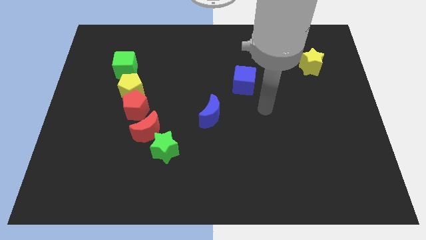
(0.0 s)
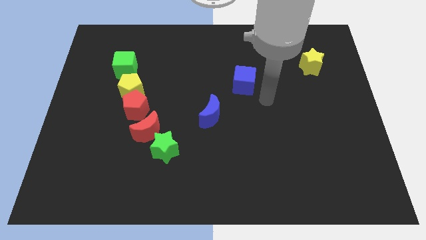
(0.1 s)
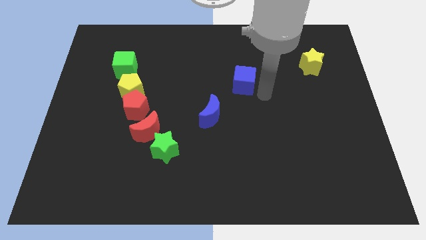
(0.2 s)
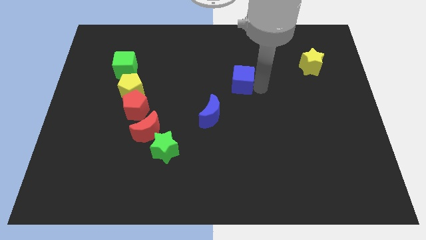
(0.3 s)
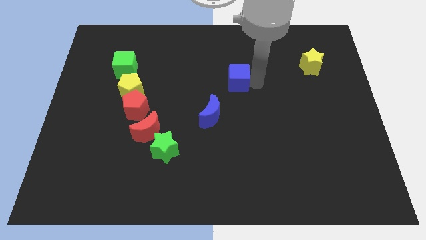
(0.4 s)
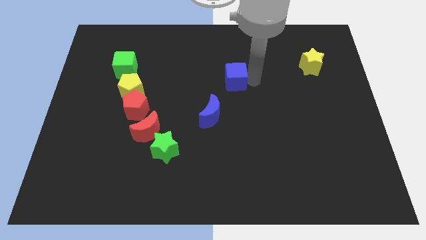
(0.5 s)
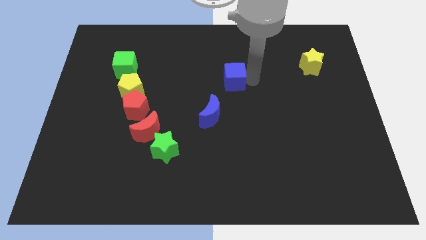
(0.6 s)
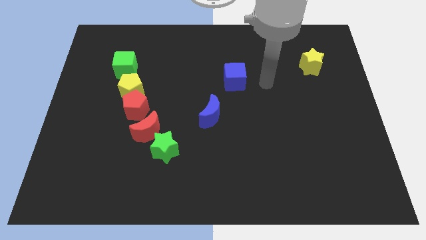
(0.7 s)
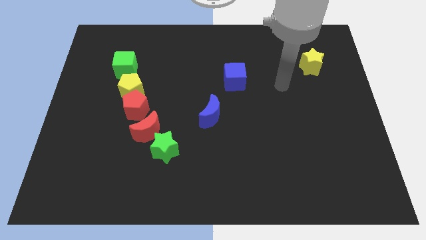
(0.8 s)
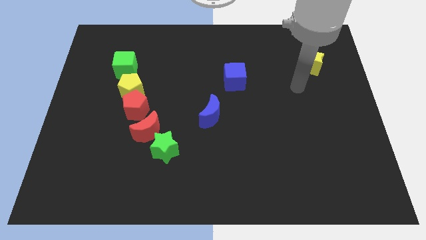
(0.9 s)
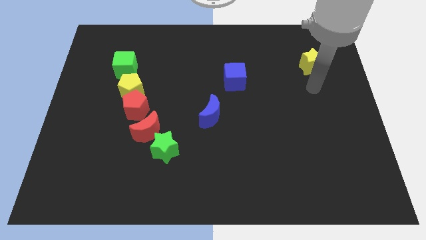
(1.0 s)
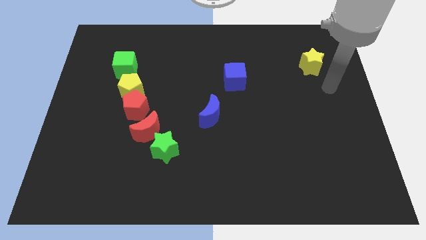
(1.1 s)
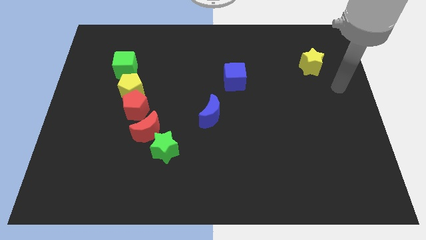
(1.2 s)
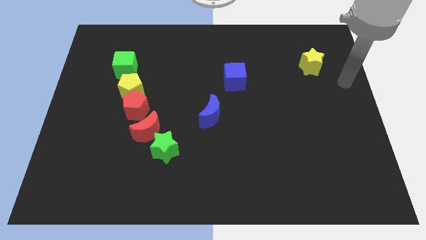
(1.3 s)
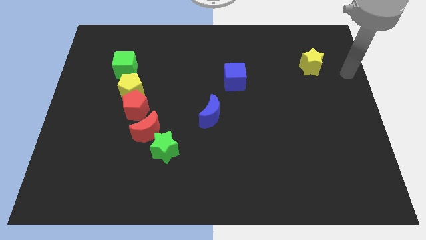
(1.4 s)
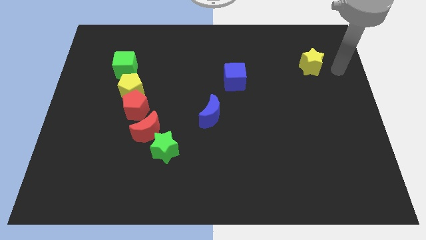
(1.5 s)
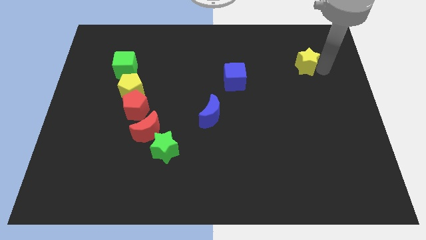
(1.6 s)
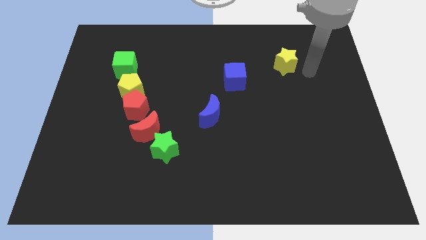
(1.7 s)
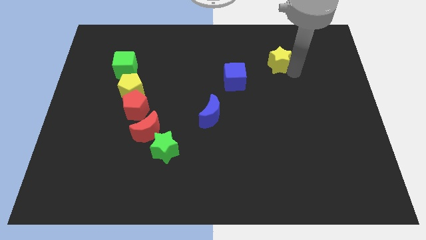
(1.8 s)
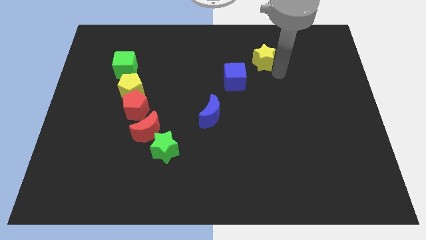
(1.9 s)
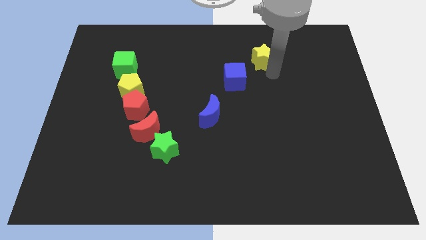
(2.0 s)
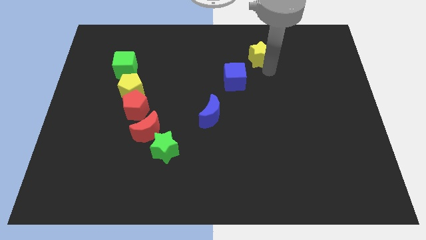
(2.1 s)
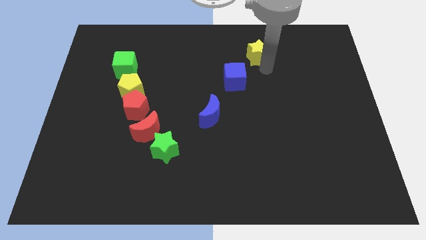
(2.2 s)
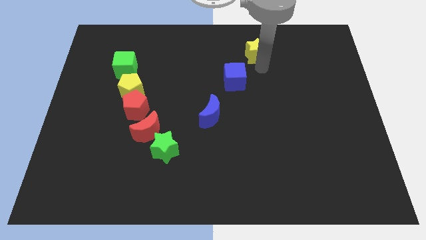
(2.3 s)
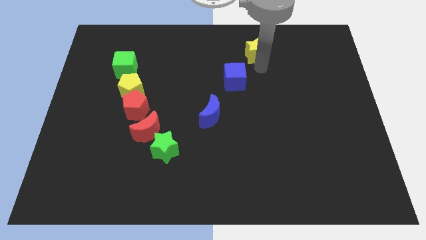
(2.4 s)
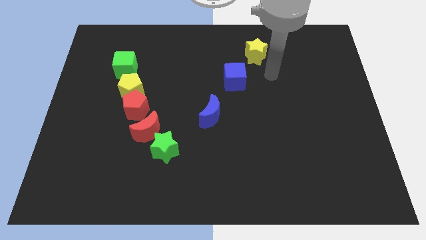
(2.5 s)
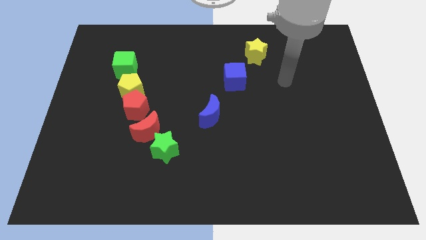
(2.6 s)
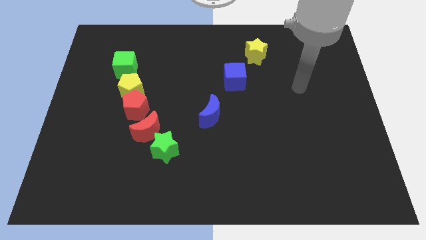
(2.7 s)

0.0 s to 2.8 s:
place blue cube and the yellow star in a diagonal line with blue crescent

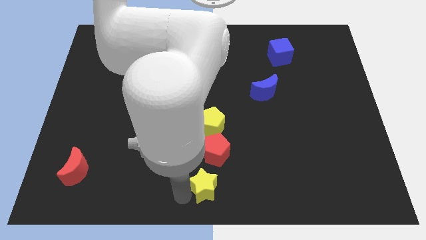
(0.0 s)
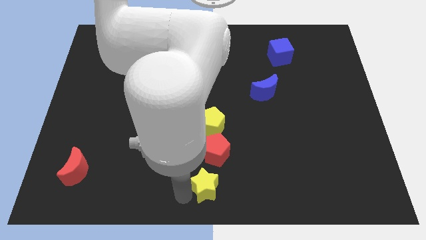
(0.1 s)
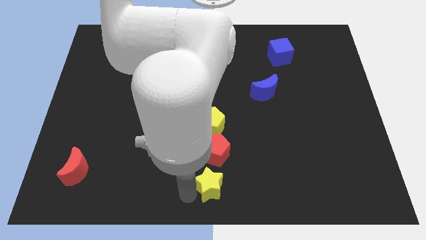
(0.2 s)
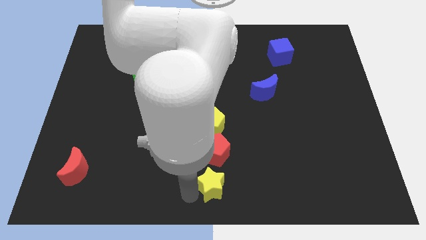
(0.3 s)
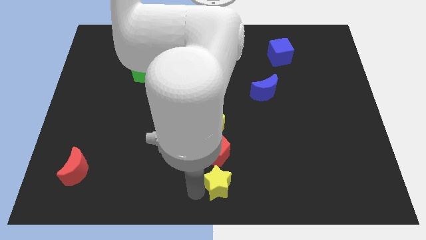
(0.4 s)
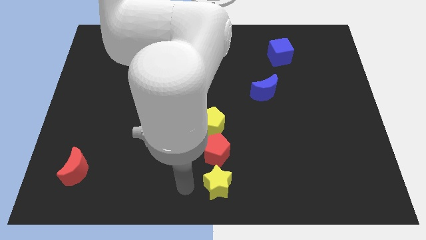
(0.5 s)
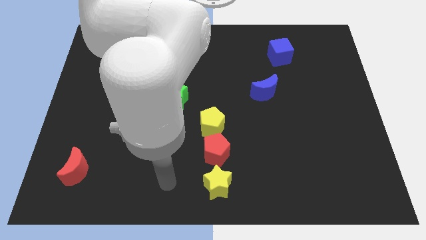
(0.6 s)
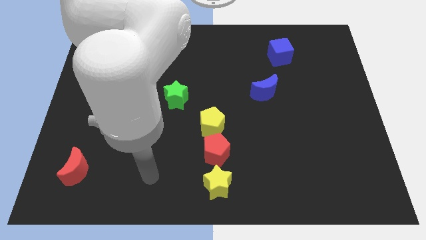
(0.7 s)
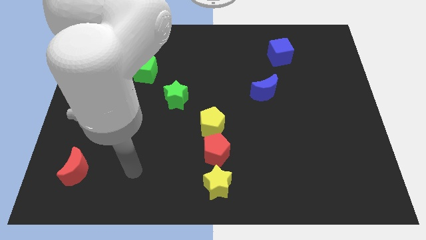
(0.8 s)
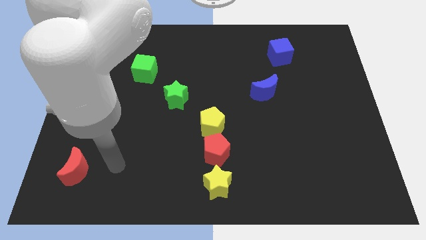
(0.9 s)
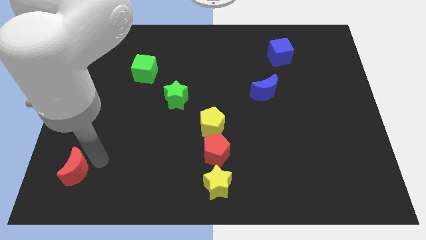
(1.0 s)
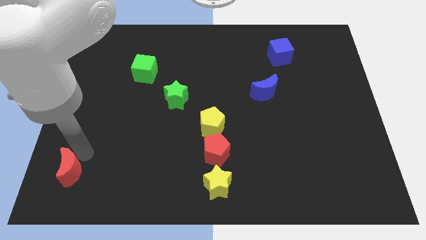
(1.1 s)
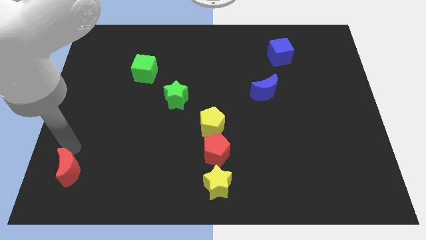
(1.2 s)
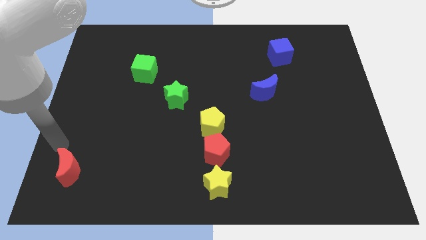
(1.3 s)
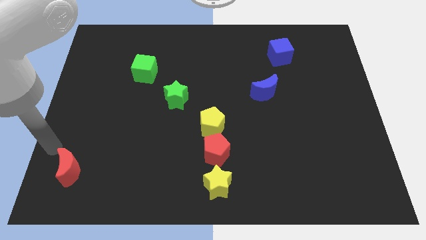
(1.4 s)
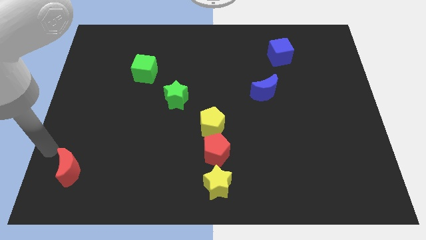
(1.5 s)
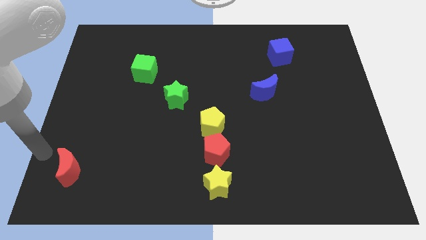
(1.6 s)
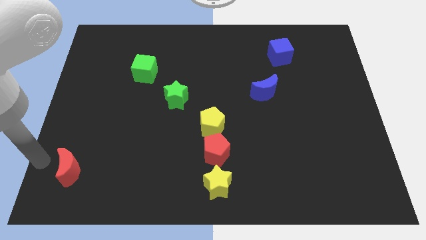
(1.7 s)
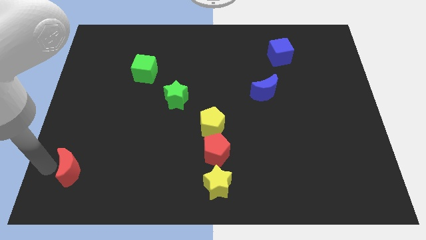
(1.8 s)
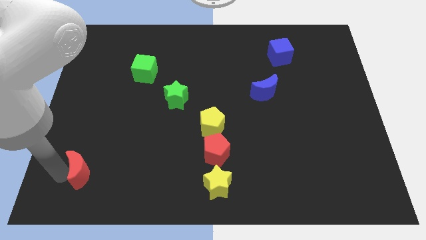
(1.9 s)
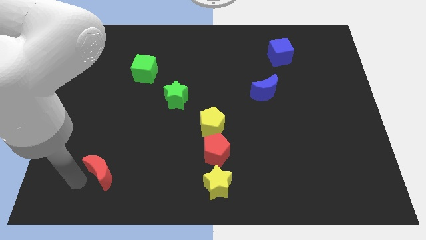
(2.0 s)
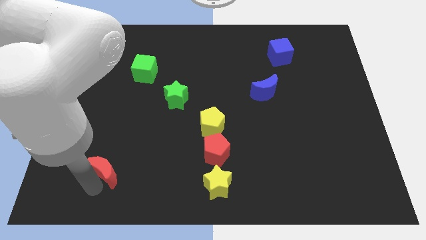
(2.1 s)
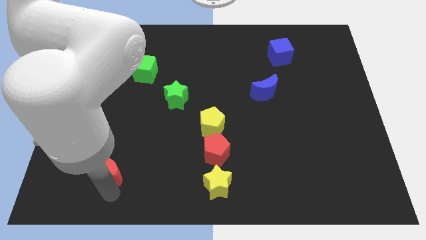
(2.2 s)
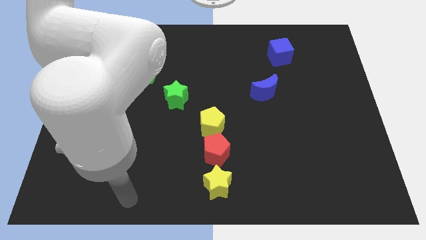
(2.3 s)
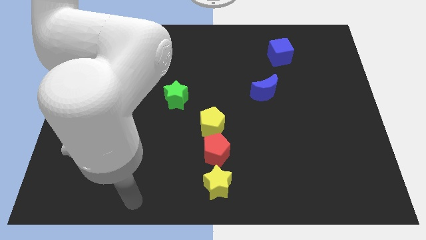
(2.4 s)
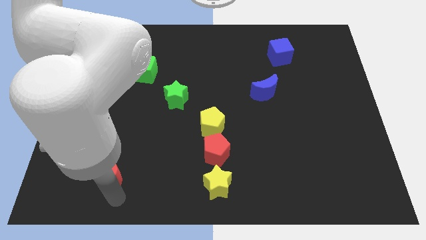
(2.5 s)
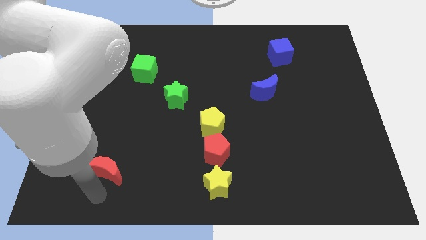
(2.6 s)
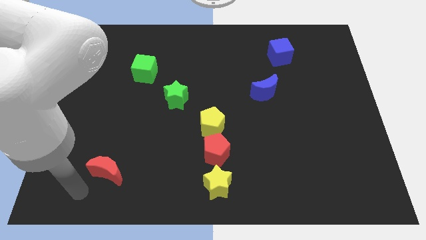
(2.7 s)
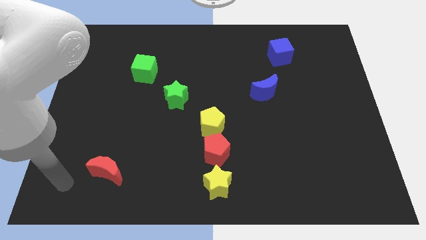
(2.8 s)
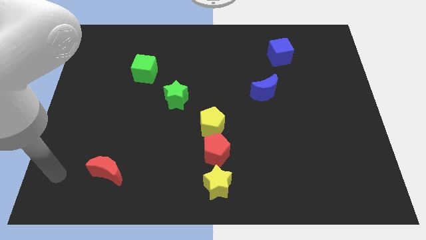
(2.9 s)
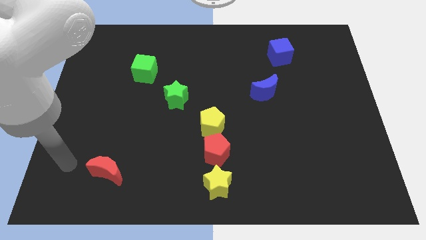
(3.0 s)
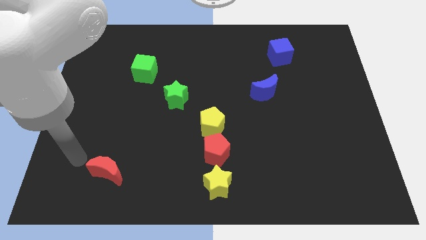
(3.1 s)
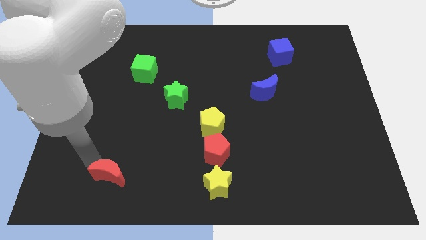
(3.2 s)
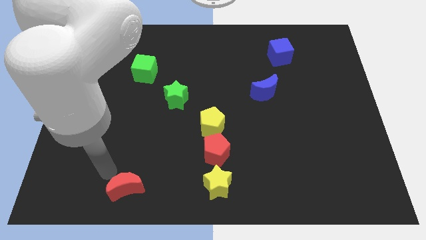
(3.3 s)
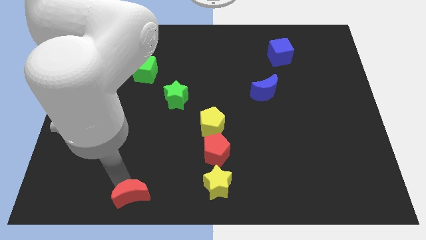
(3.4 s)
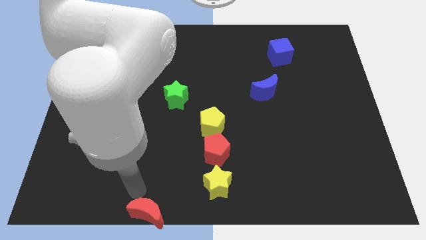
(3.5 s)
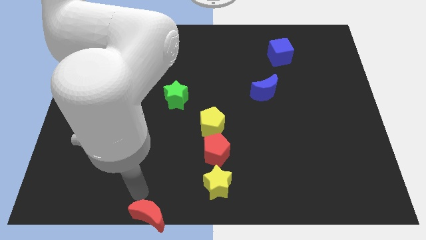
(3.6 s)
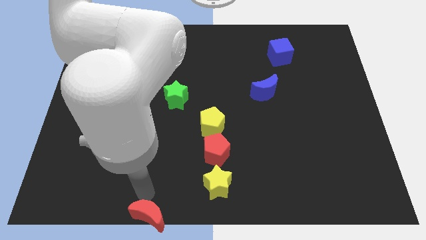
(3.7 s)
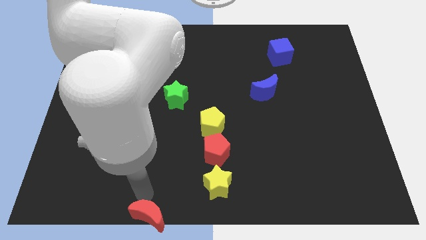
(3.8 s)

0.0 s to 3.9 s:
move the red moon to the bottom

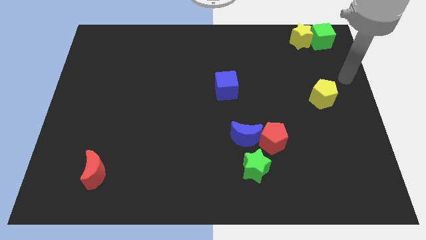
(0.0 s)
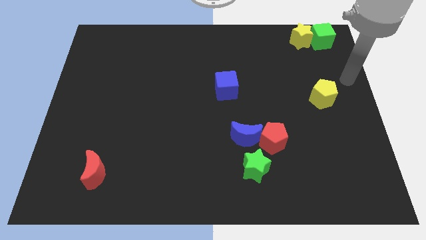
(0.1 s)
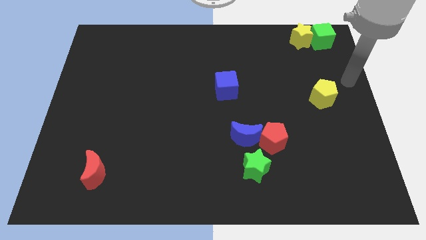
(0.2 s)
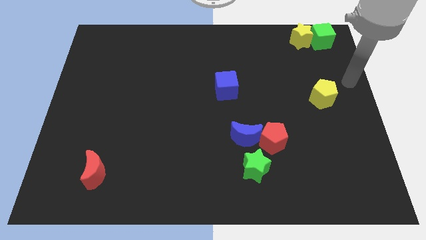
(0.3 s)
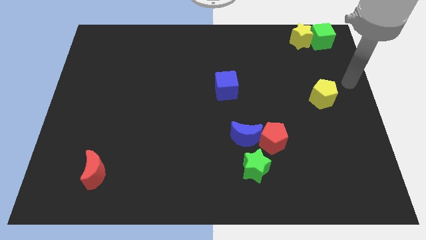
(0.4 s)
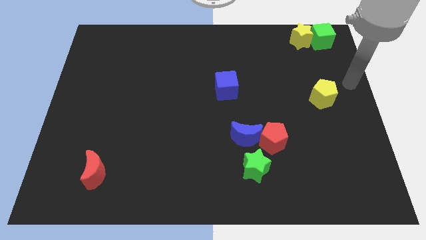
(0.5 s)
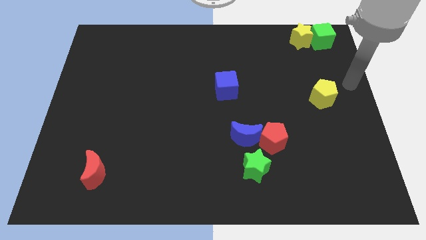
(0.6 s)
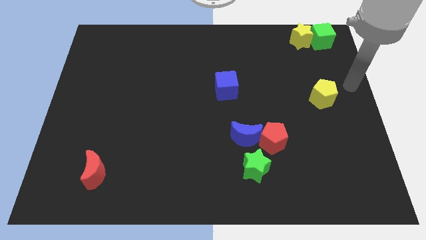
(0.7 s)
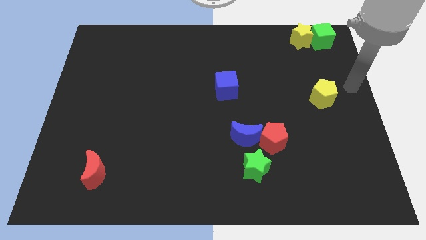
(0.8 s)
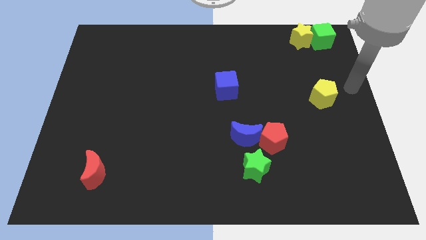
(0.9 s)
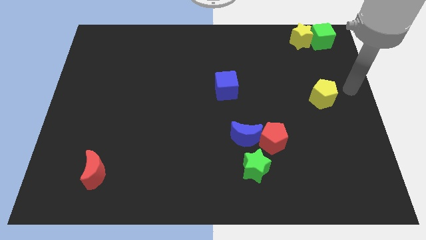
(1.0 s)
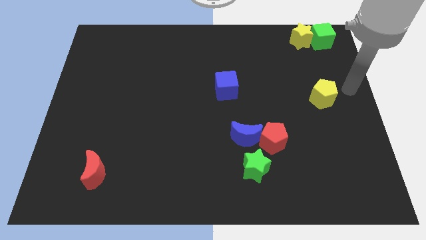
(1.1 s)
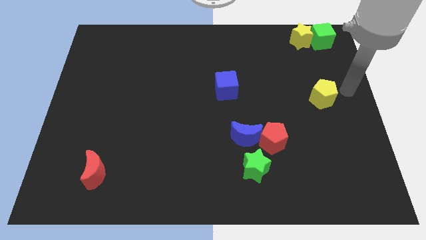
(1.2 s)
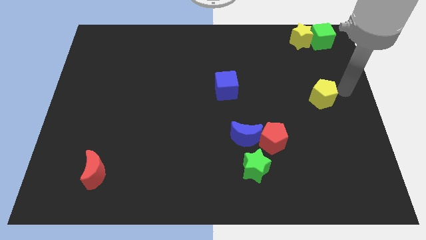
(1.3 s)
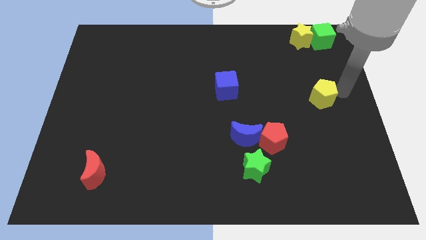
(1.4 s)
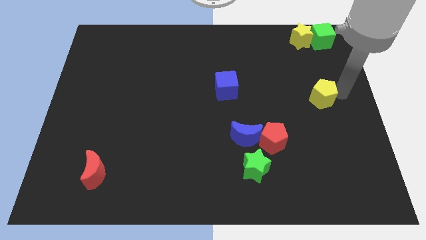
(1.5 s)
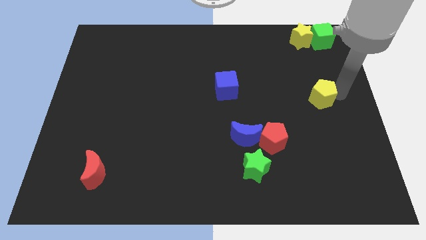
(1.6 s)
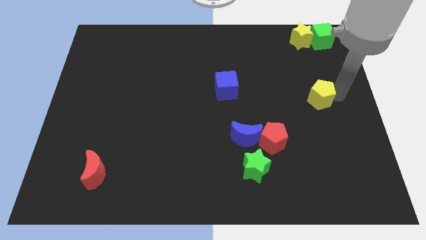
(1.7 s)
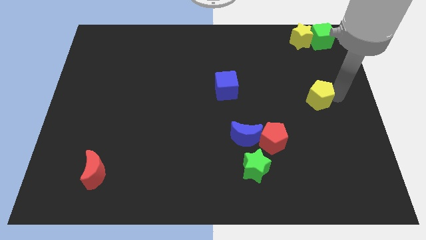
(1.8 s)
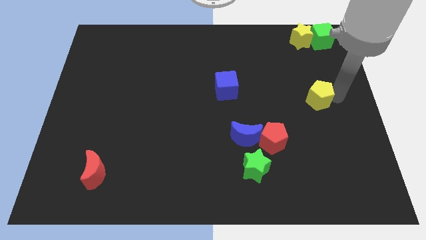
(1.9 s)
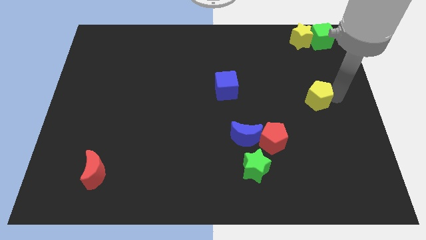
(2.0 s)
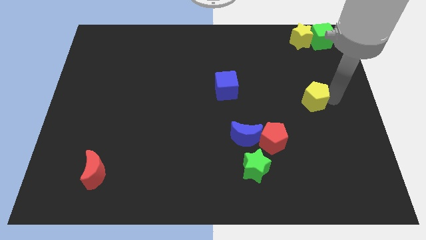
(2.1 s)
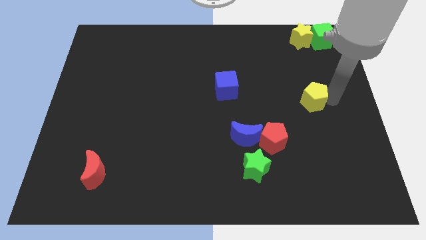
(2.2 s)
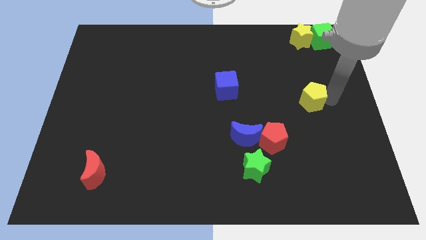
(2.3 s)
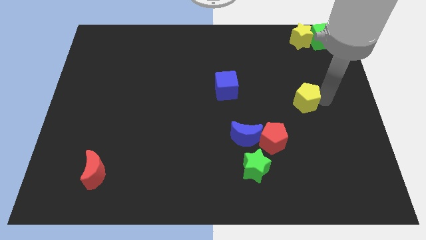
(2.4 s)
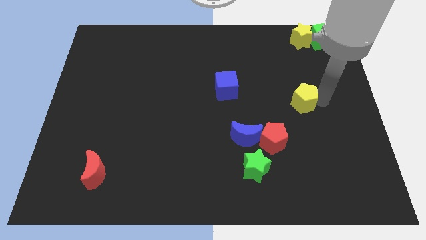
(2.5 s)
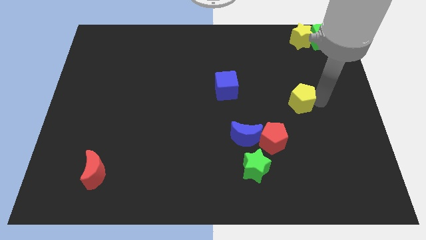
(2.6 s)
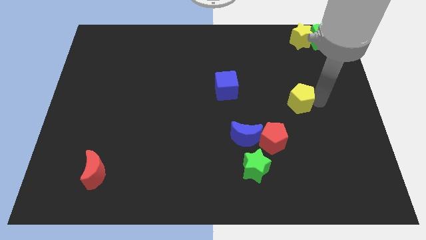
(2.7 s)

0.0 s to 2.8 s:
push the yellow pentagon slightly to the left side of the board
